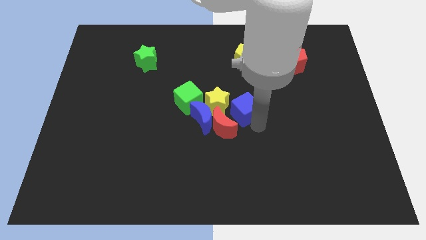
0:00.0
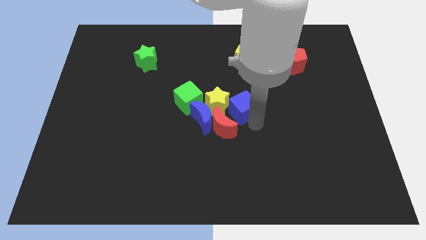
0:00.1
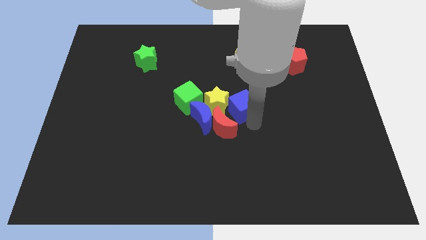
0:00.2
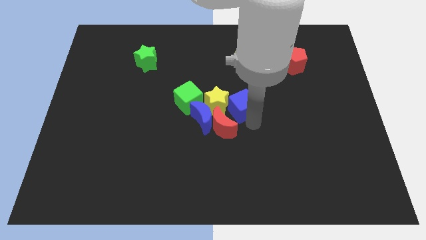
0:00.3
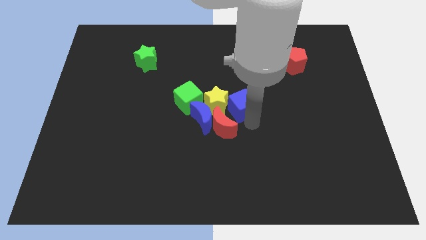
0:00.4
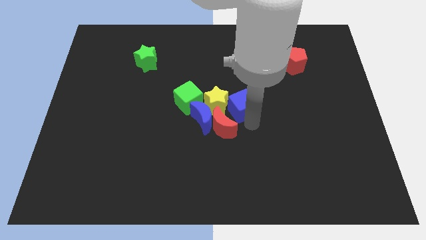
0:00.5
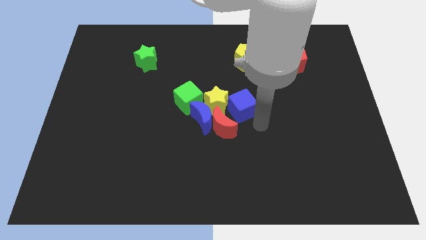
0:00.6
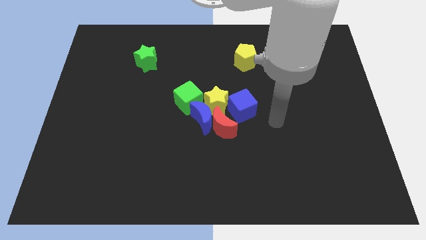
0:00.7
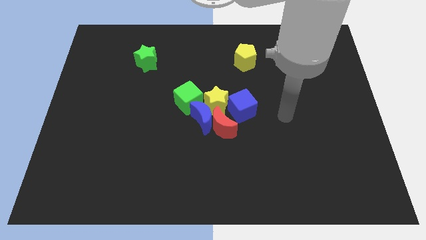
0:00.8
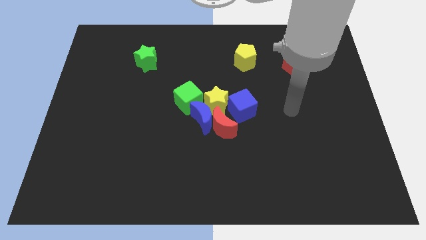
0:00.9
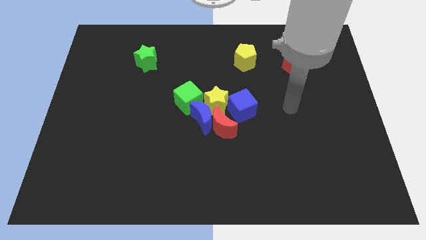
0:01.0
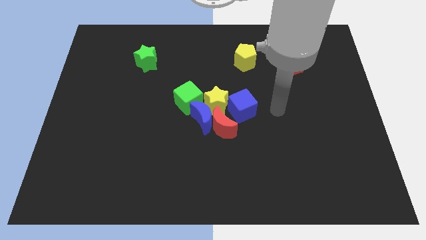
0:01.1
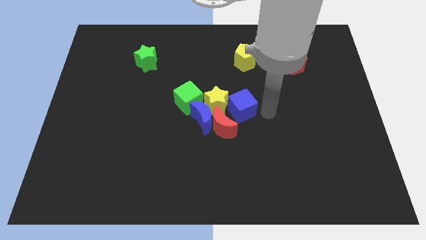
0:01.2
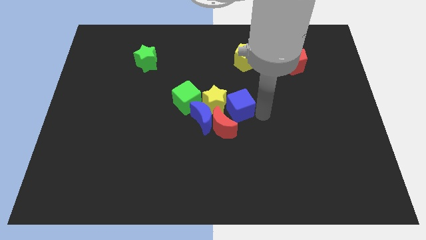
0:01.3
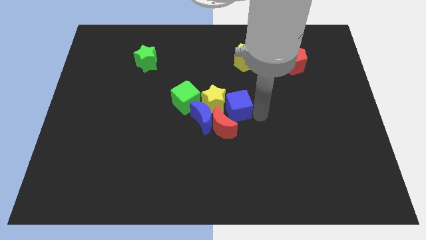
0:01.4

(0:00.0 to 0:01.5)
push the blue moon into the yellow star

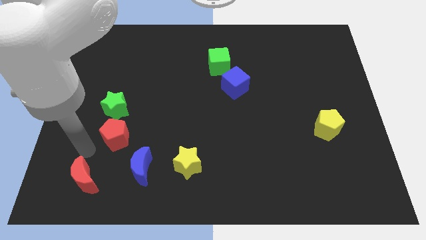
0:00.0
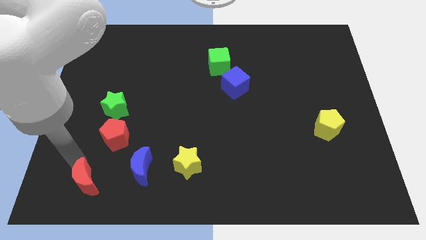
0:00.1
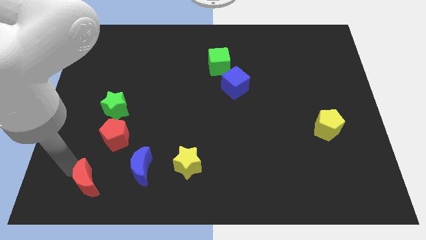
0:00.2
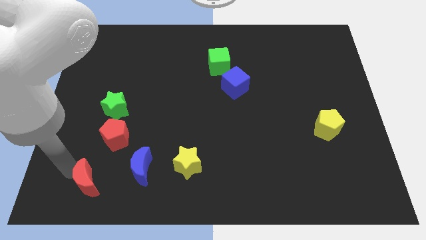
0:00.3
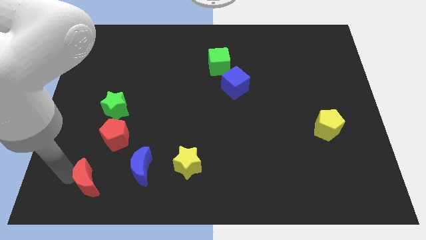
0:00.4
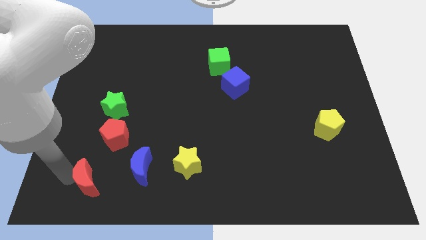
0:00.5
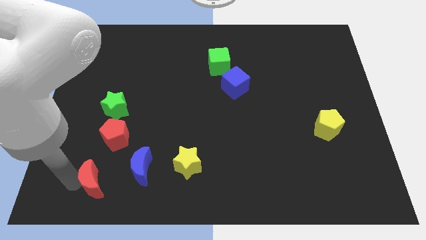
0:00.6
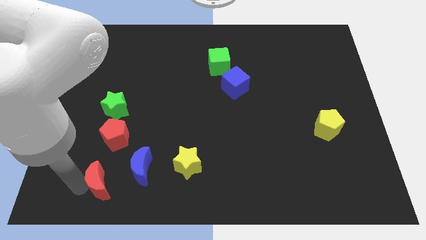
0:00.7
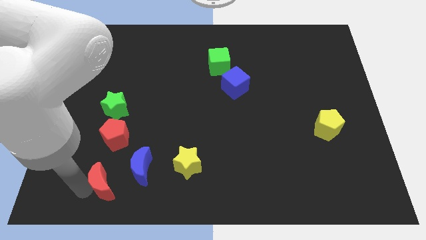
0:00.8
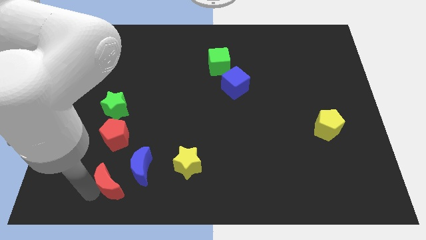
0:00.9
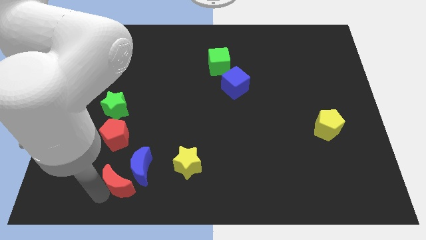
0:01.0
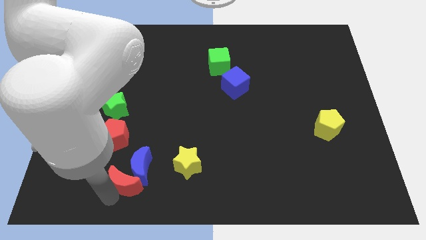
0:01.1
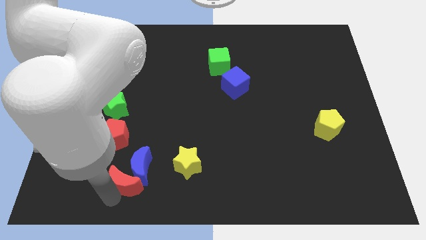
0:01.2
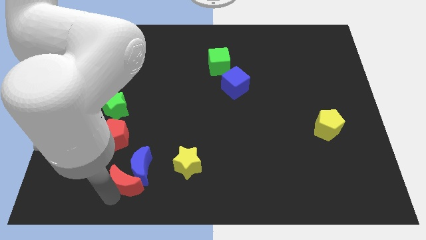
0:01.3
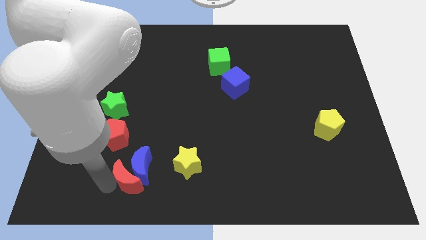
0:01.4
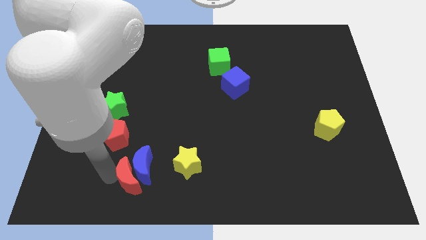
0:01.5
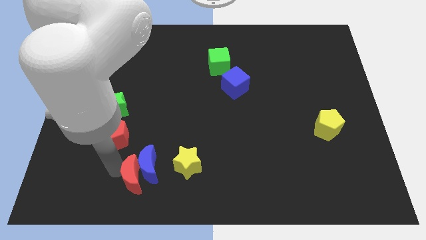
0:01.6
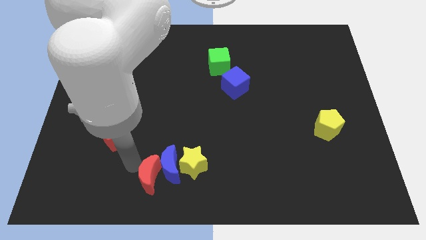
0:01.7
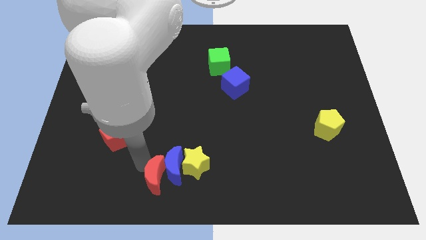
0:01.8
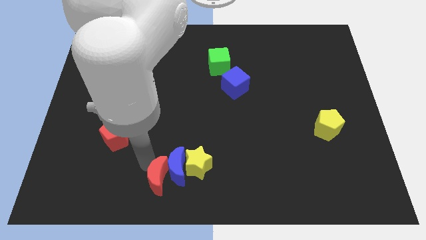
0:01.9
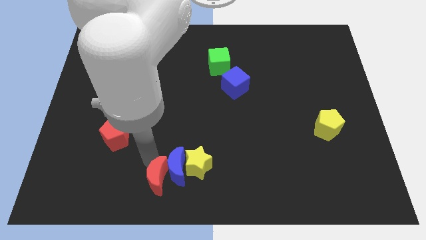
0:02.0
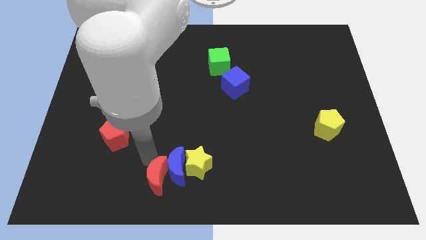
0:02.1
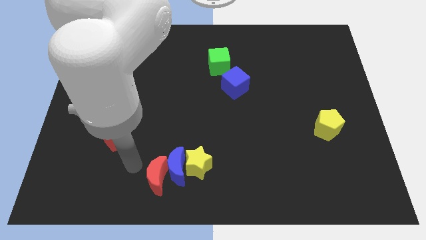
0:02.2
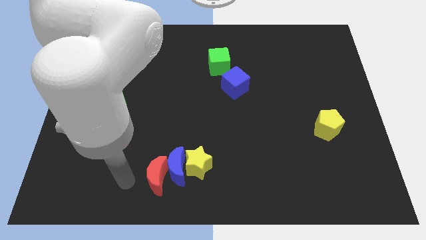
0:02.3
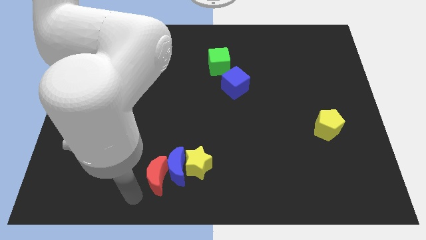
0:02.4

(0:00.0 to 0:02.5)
push red crescent into blue crescent

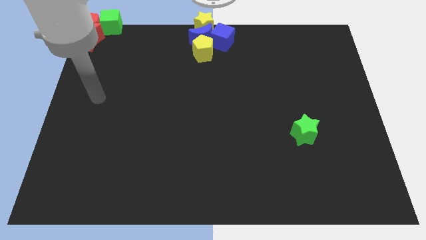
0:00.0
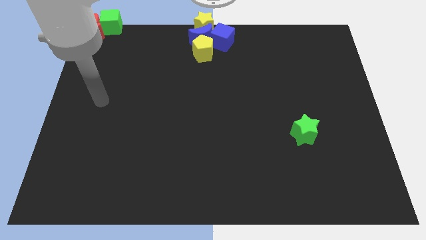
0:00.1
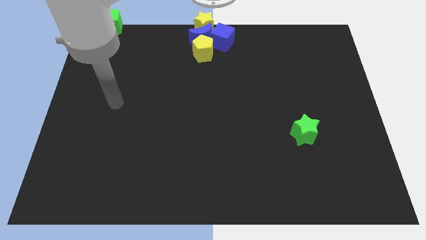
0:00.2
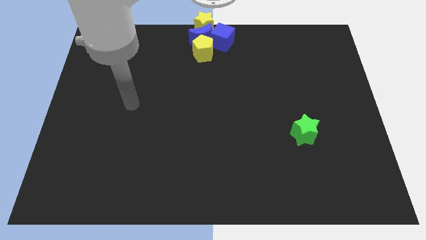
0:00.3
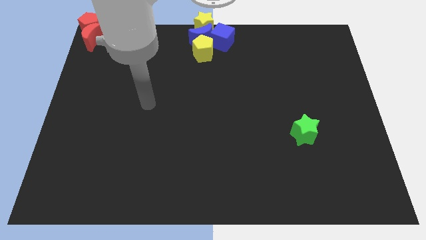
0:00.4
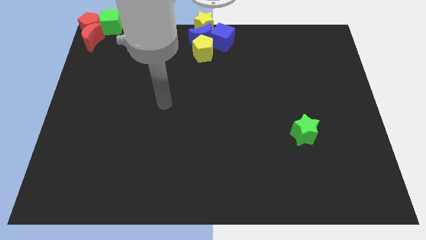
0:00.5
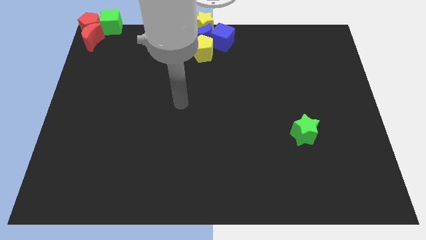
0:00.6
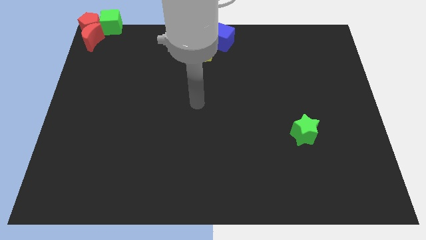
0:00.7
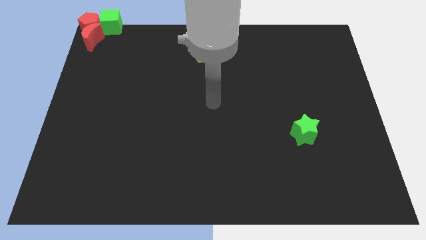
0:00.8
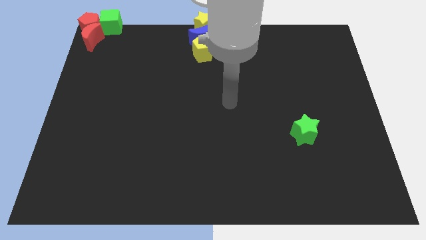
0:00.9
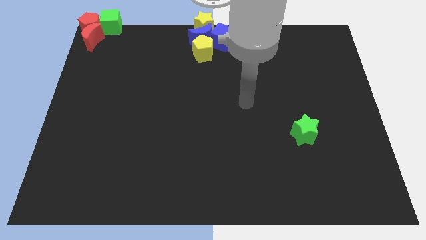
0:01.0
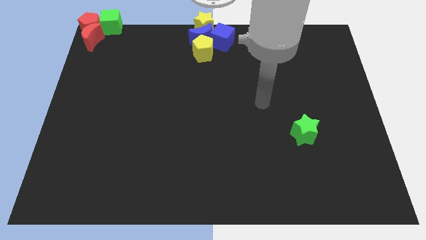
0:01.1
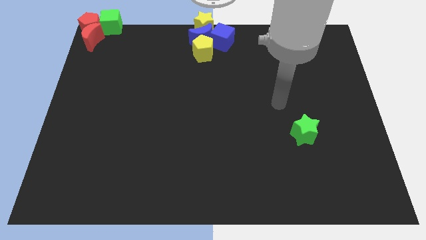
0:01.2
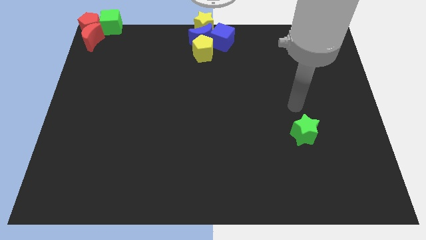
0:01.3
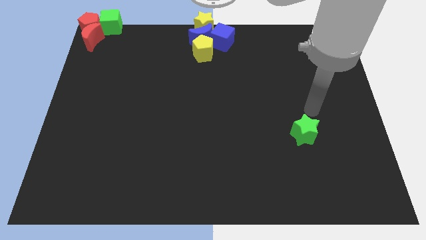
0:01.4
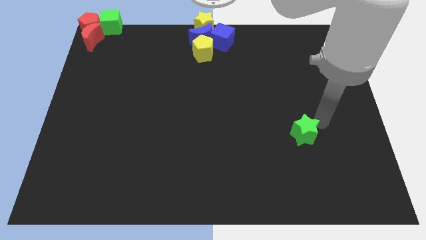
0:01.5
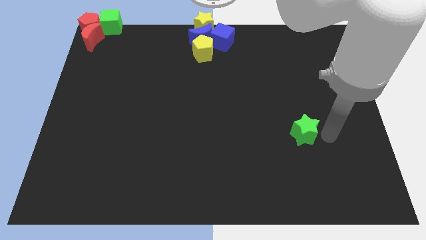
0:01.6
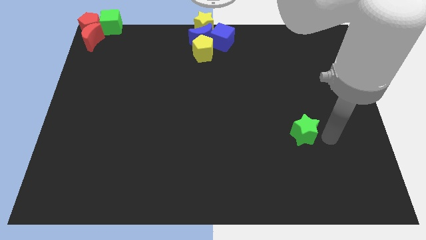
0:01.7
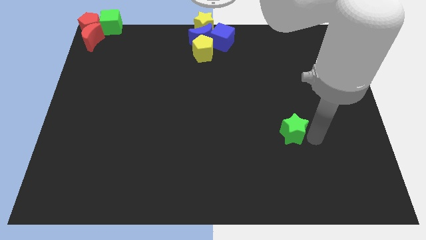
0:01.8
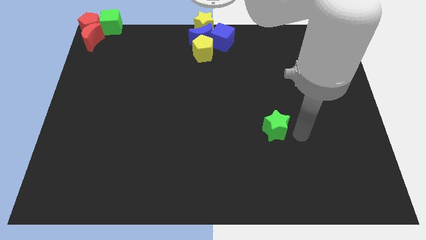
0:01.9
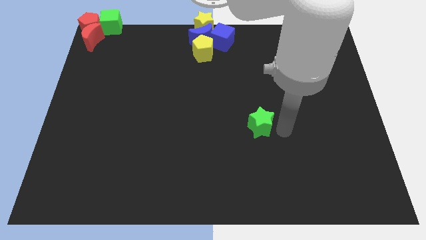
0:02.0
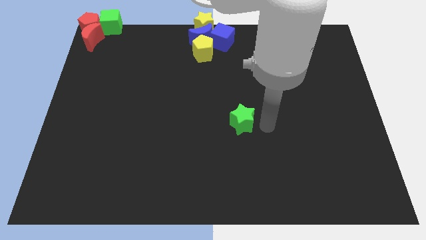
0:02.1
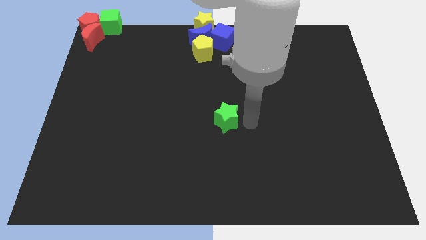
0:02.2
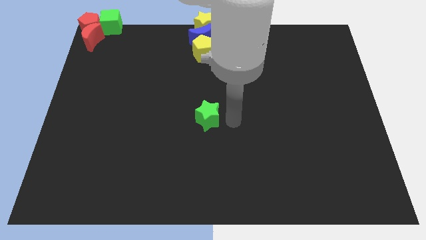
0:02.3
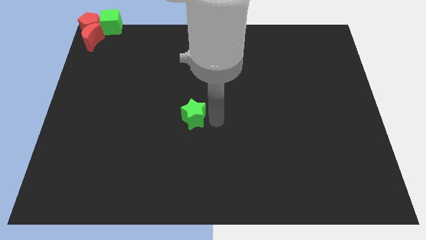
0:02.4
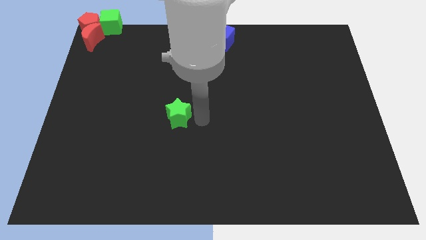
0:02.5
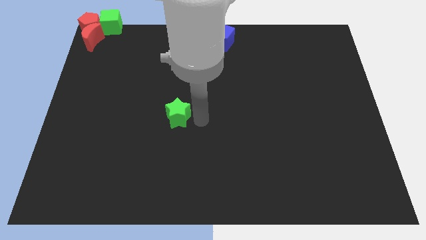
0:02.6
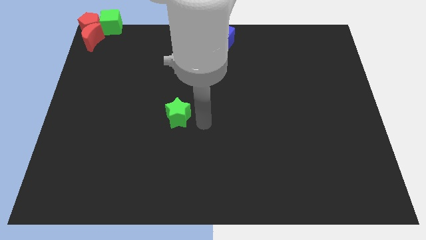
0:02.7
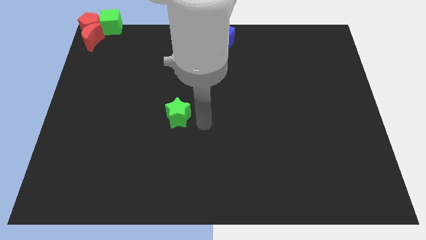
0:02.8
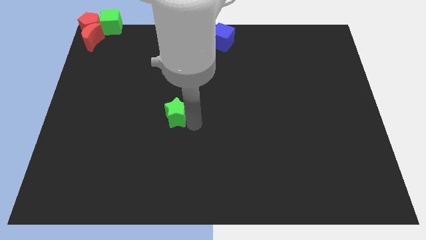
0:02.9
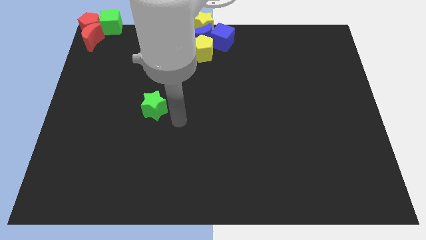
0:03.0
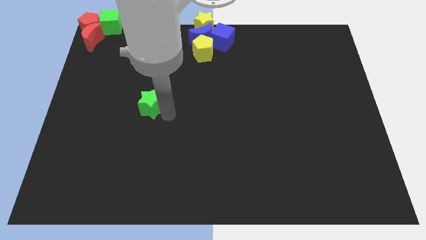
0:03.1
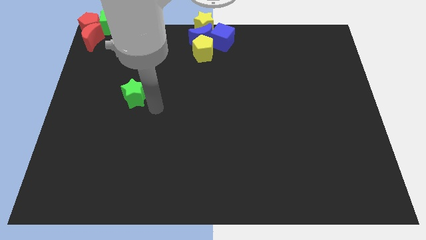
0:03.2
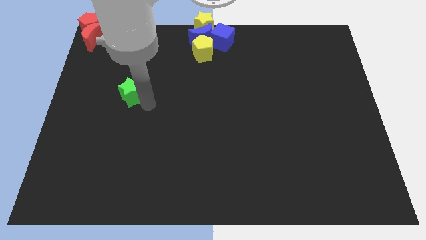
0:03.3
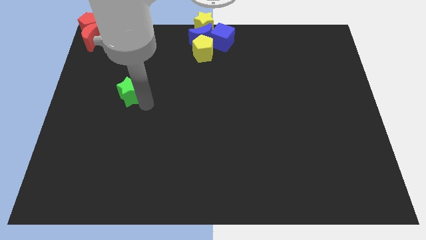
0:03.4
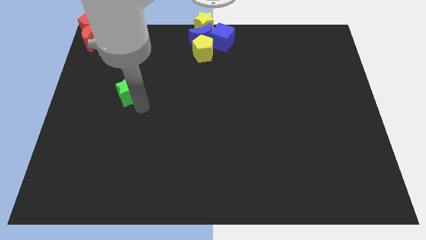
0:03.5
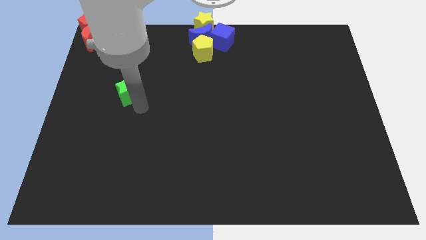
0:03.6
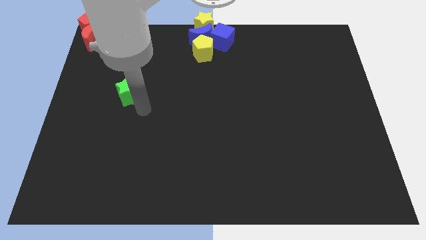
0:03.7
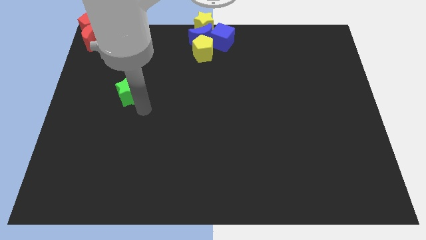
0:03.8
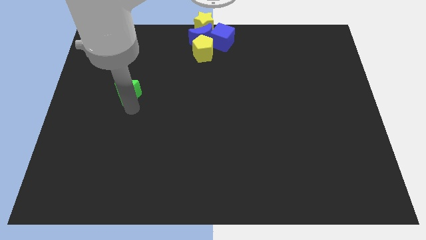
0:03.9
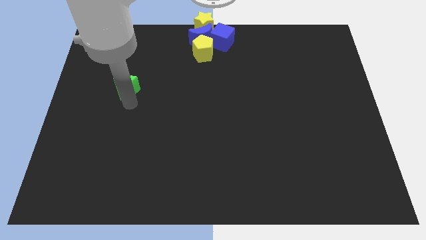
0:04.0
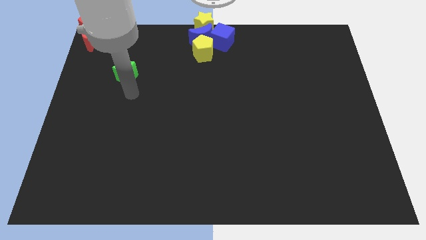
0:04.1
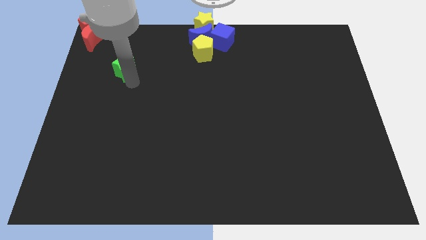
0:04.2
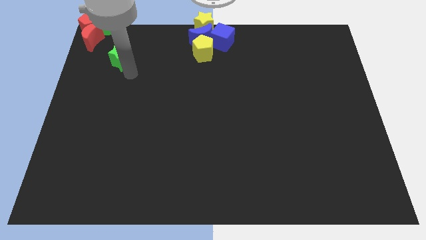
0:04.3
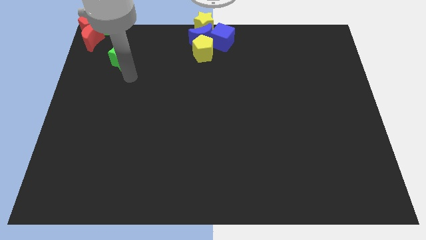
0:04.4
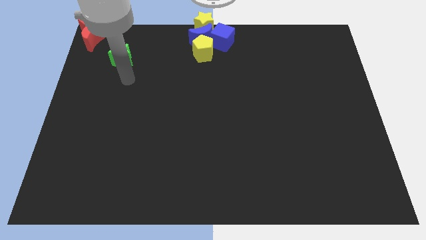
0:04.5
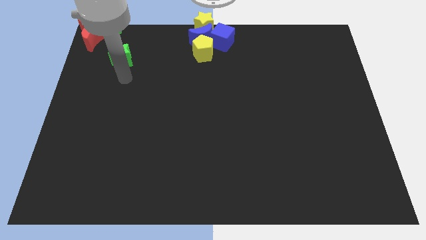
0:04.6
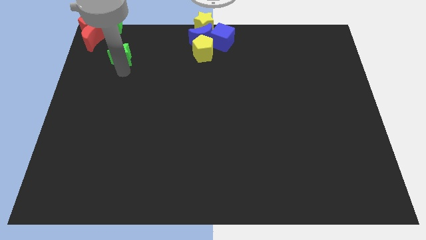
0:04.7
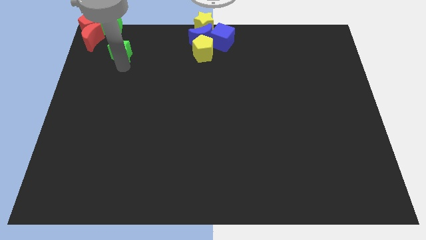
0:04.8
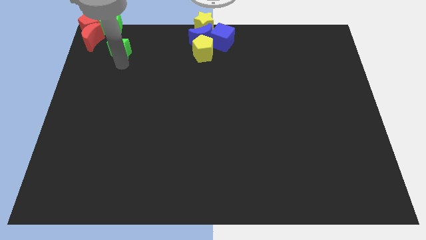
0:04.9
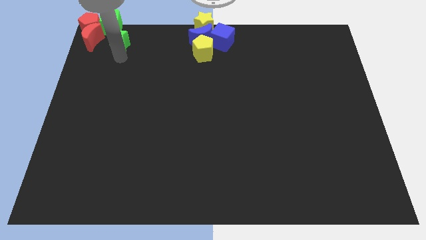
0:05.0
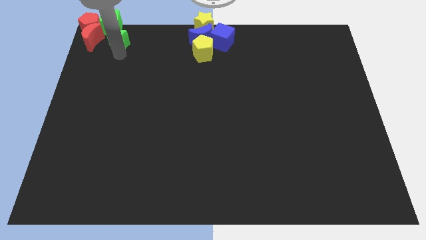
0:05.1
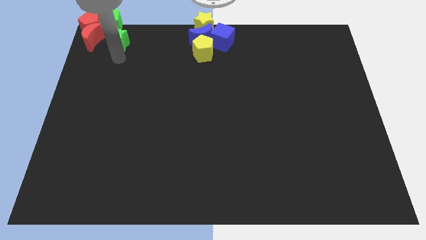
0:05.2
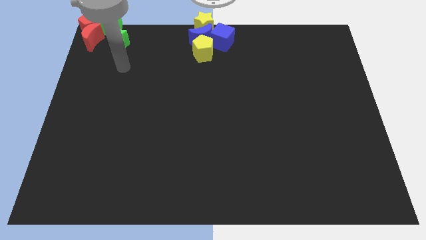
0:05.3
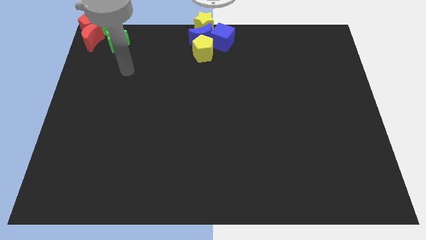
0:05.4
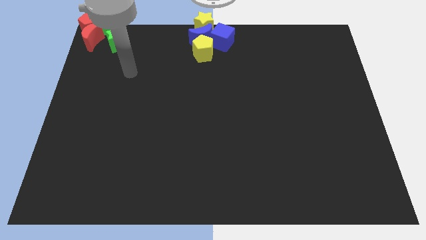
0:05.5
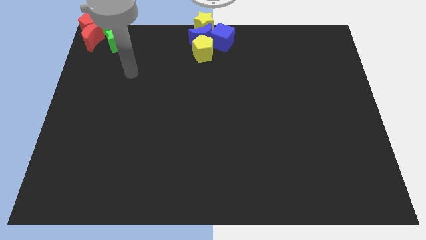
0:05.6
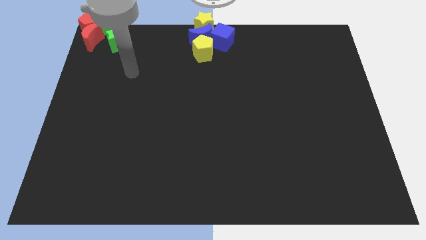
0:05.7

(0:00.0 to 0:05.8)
move the green star towards the green cube
